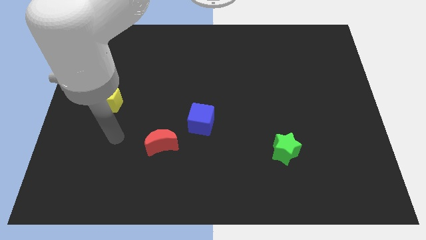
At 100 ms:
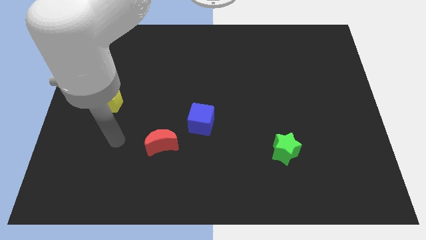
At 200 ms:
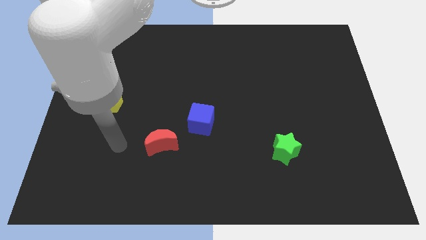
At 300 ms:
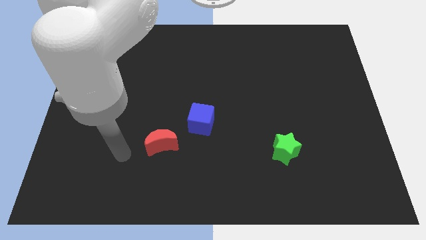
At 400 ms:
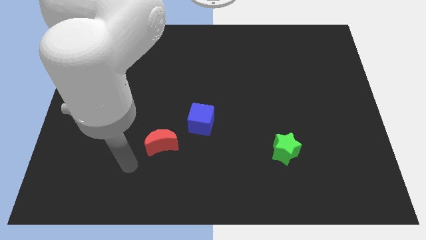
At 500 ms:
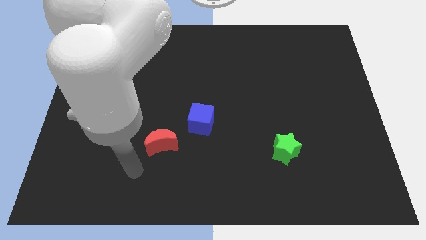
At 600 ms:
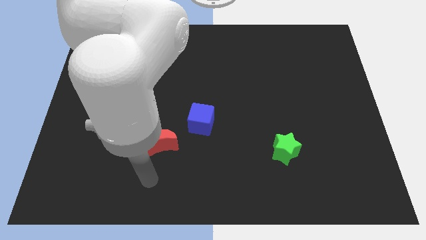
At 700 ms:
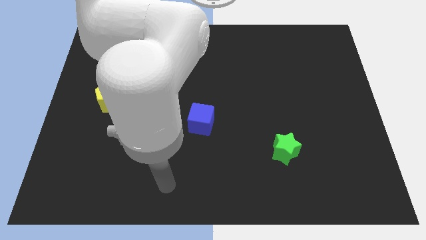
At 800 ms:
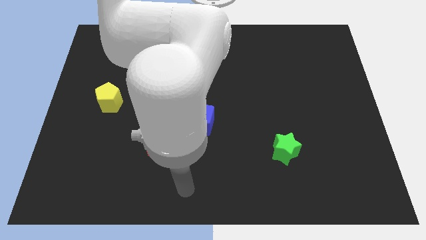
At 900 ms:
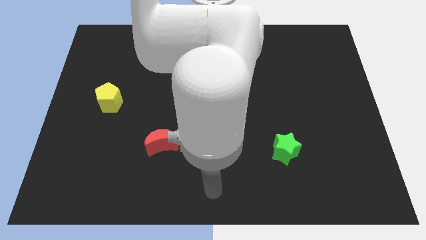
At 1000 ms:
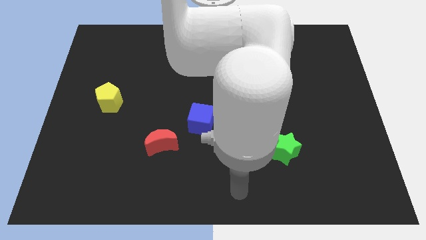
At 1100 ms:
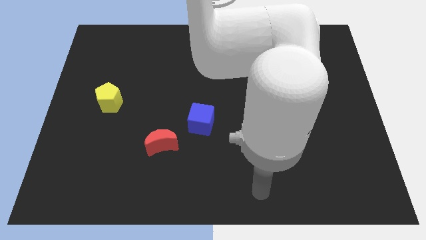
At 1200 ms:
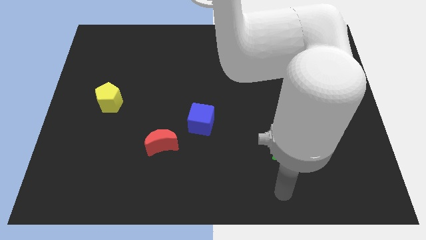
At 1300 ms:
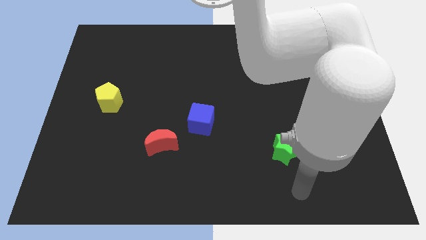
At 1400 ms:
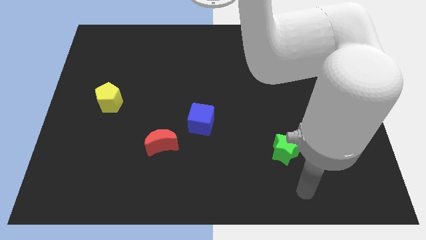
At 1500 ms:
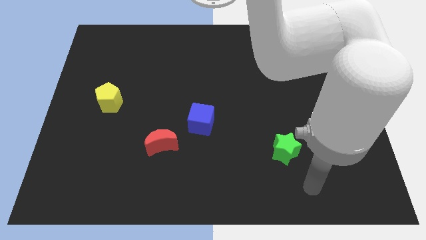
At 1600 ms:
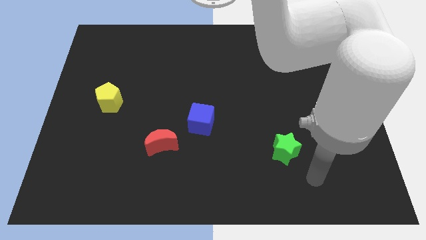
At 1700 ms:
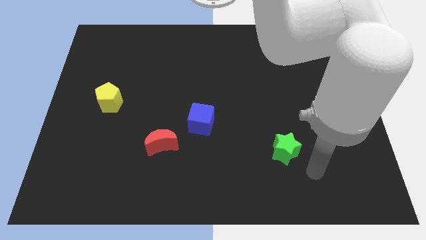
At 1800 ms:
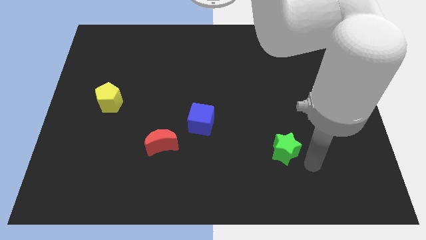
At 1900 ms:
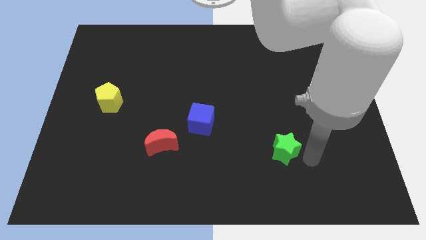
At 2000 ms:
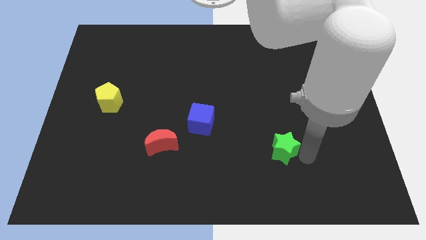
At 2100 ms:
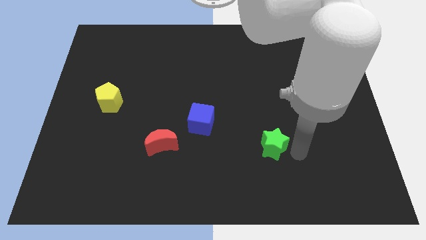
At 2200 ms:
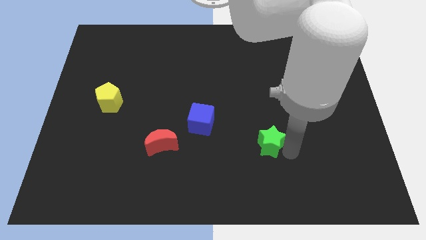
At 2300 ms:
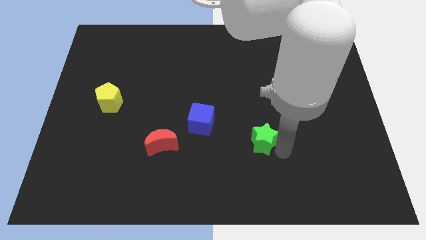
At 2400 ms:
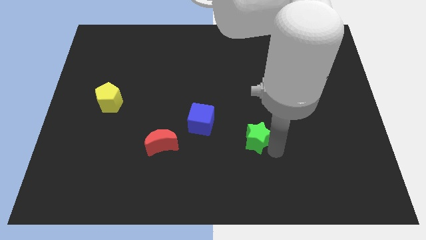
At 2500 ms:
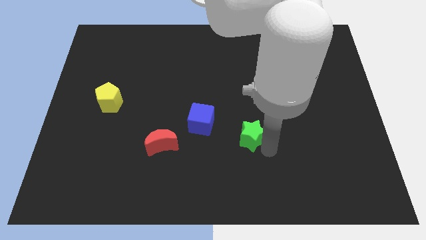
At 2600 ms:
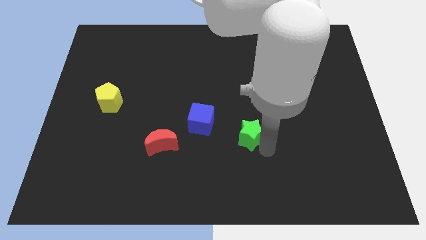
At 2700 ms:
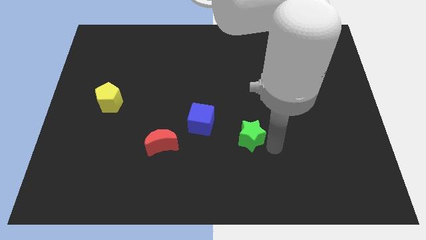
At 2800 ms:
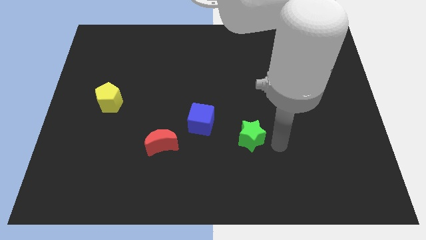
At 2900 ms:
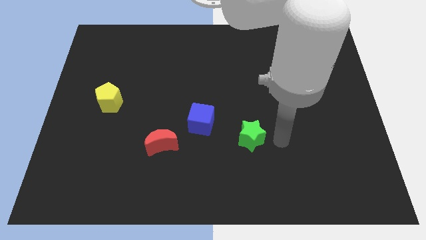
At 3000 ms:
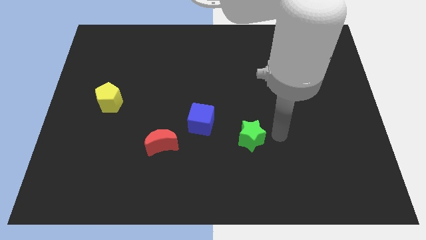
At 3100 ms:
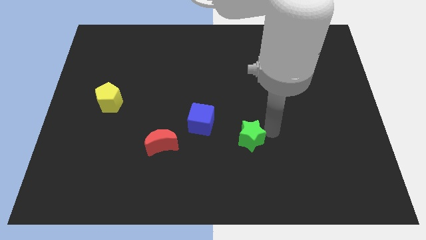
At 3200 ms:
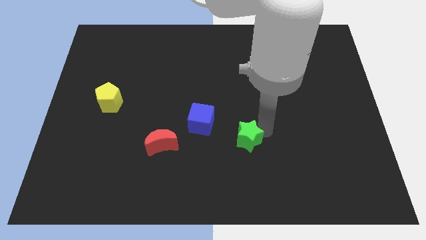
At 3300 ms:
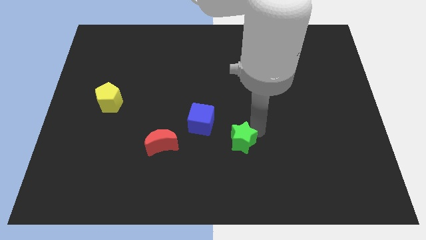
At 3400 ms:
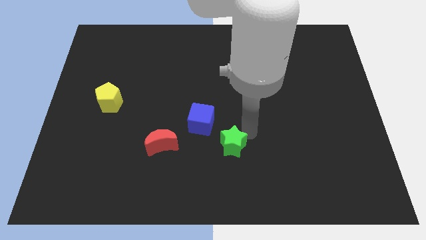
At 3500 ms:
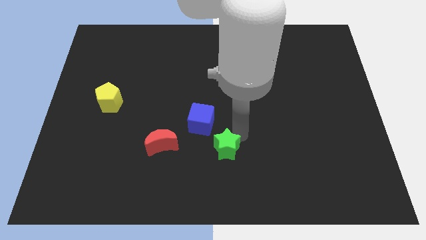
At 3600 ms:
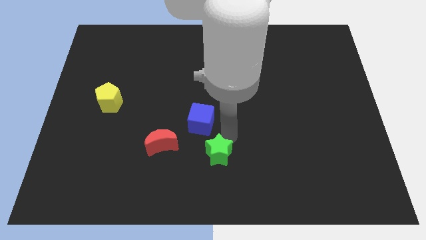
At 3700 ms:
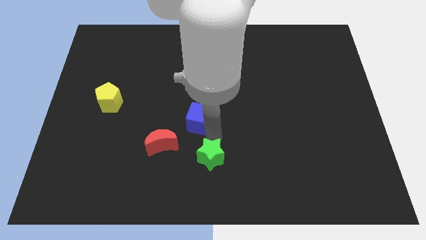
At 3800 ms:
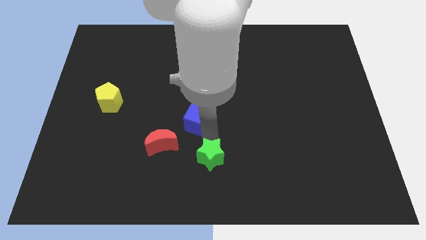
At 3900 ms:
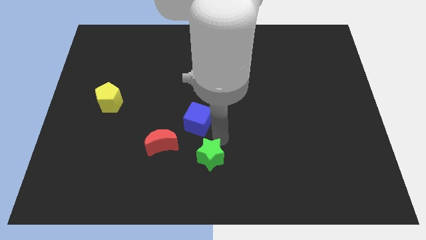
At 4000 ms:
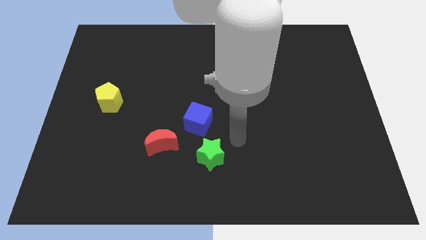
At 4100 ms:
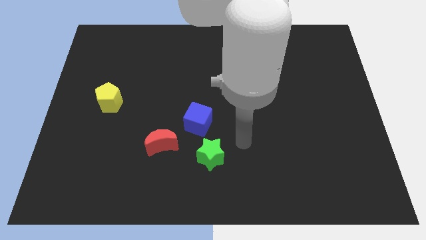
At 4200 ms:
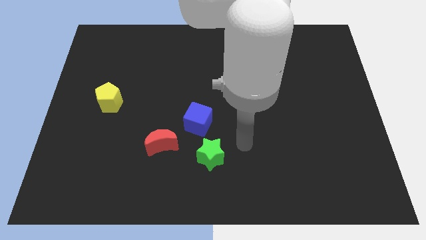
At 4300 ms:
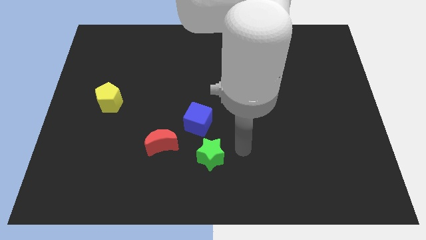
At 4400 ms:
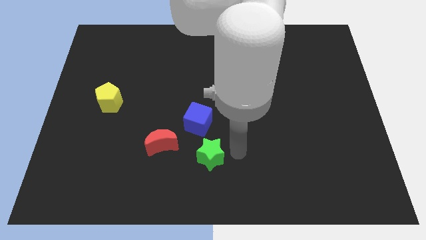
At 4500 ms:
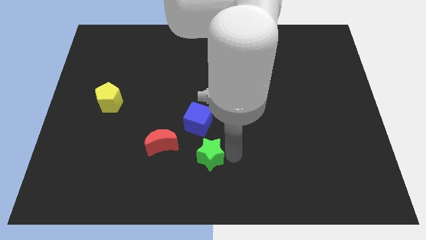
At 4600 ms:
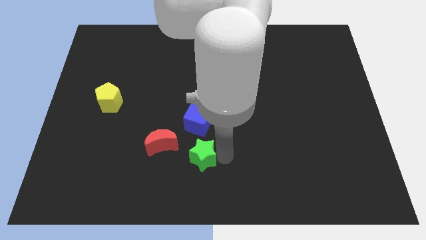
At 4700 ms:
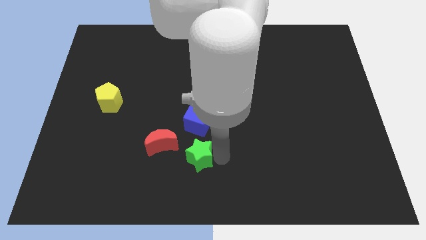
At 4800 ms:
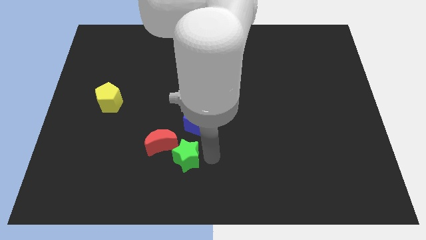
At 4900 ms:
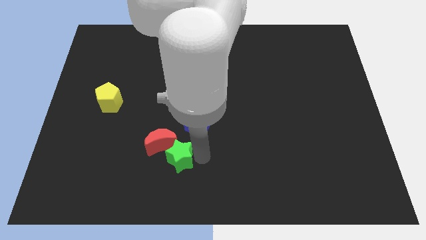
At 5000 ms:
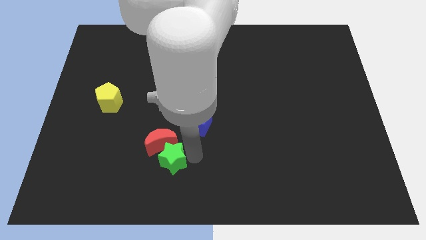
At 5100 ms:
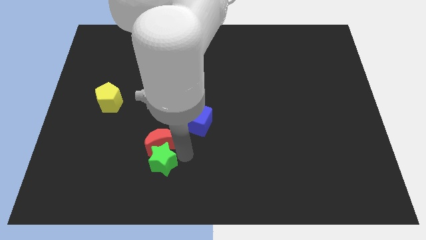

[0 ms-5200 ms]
slide the star to the moon

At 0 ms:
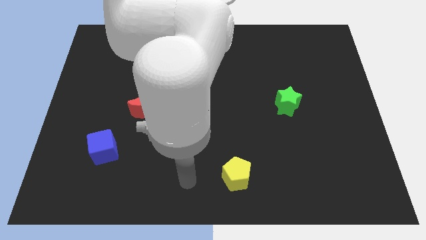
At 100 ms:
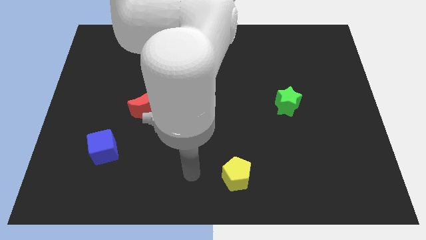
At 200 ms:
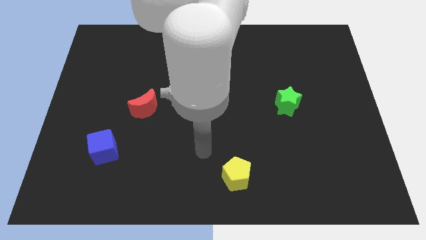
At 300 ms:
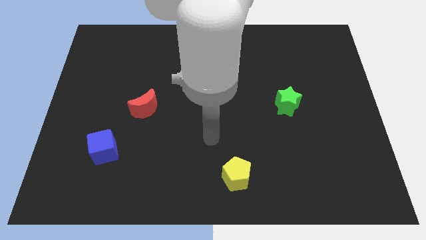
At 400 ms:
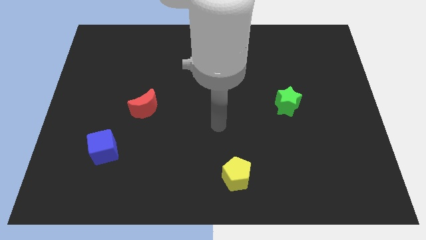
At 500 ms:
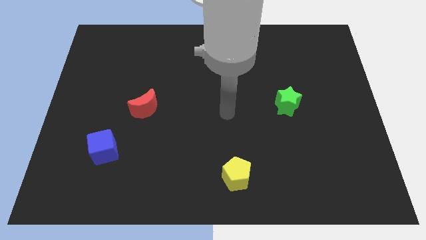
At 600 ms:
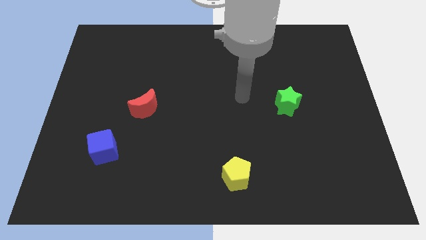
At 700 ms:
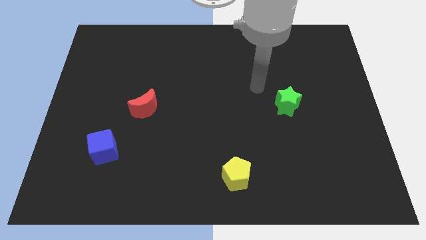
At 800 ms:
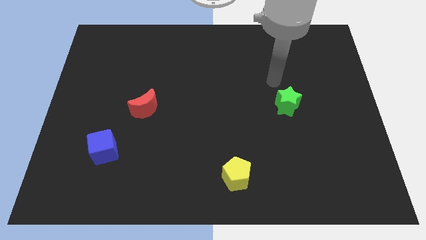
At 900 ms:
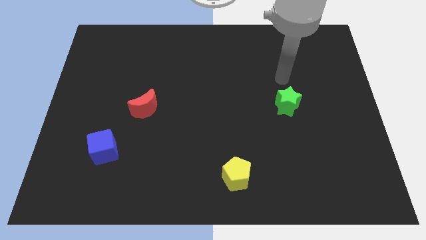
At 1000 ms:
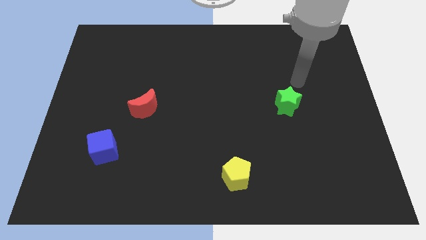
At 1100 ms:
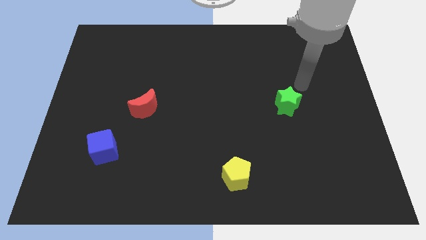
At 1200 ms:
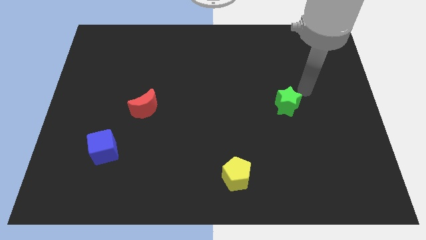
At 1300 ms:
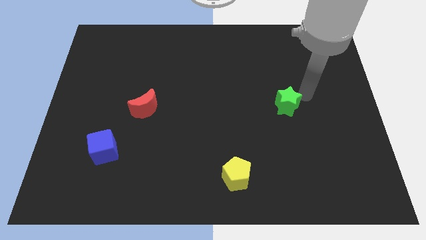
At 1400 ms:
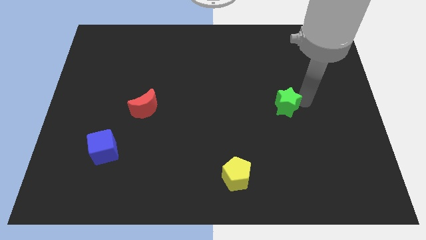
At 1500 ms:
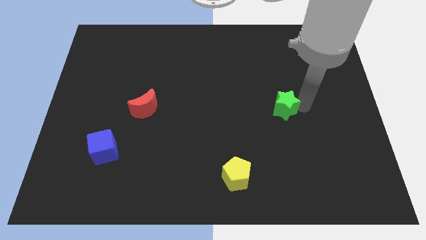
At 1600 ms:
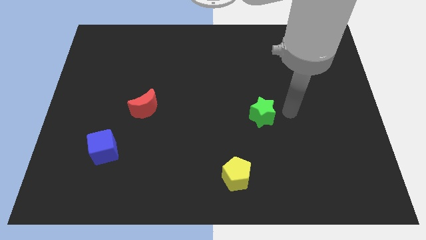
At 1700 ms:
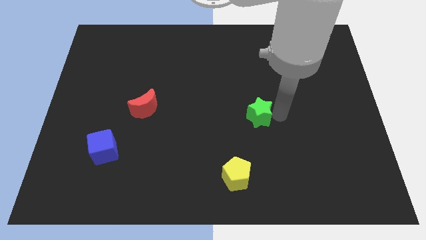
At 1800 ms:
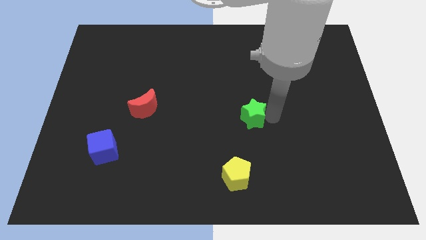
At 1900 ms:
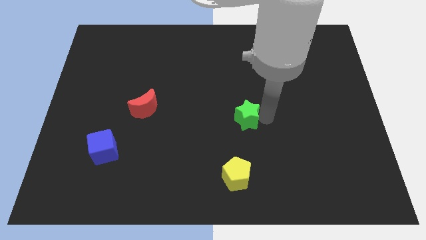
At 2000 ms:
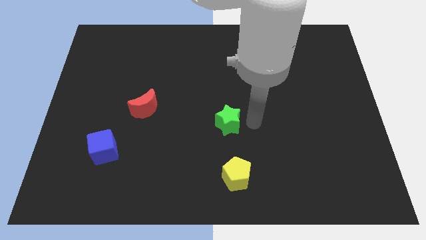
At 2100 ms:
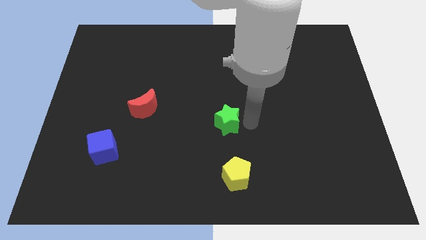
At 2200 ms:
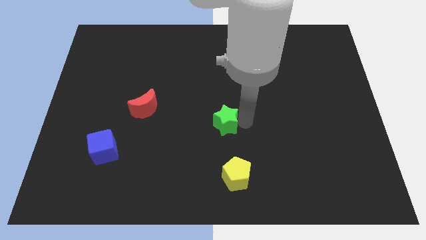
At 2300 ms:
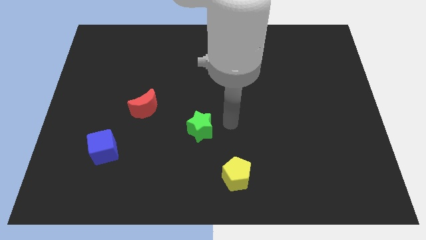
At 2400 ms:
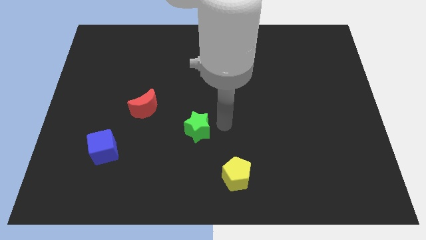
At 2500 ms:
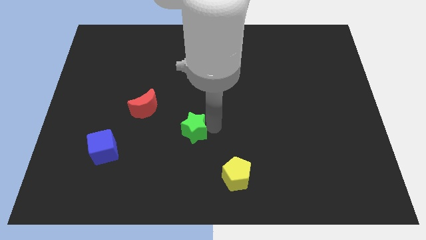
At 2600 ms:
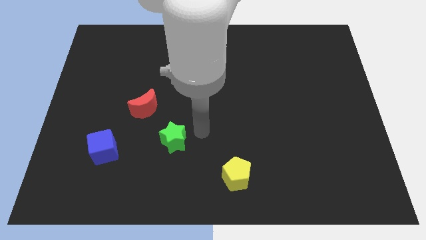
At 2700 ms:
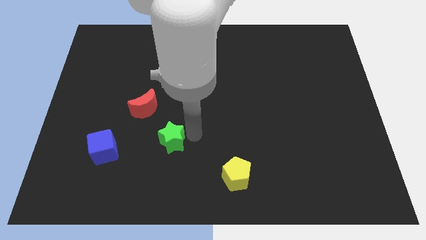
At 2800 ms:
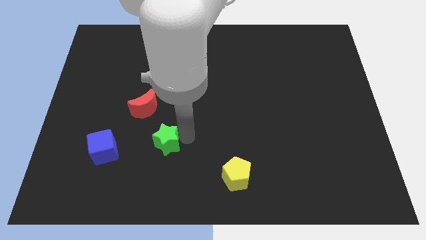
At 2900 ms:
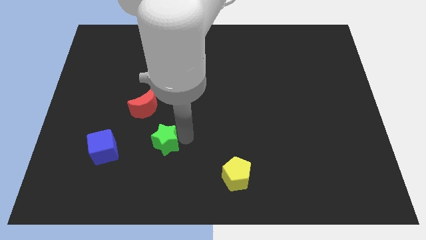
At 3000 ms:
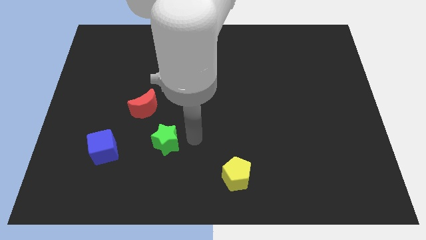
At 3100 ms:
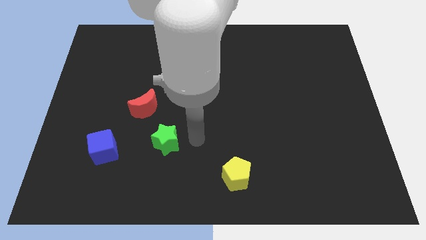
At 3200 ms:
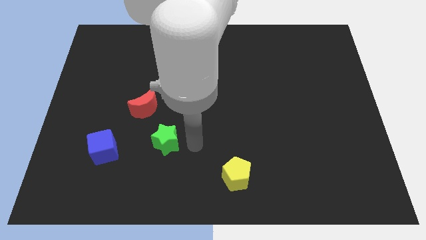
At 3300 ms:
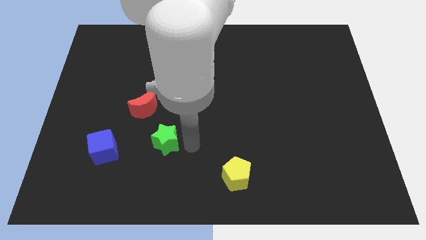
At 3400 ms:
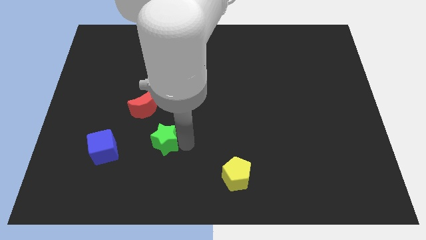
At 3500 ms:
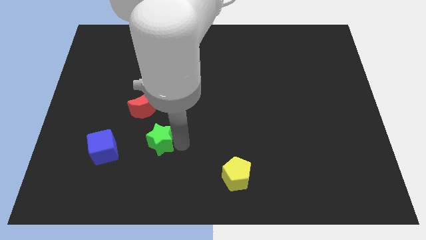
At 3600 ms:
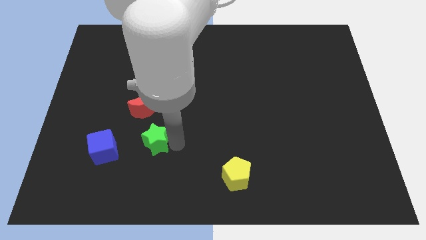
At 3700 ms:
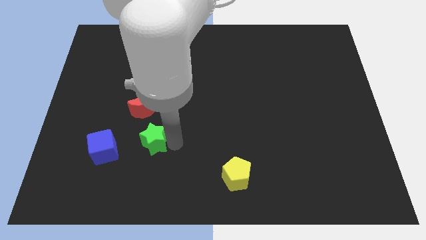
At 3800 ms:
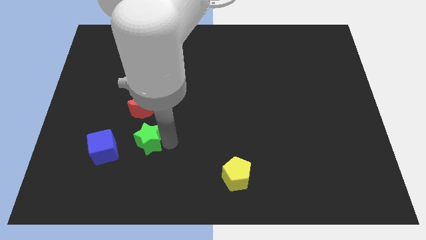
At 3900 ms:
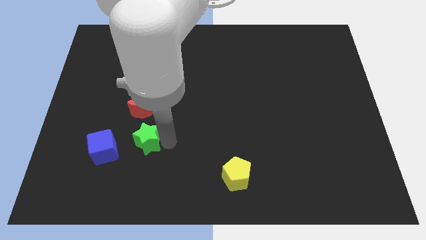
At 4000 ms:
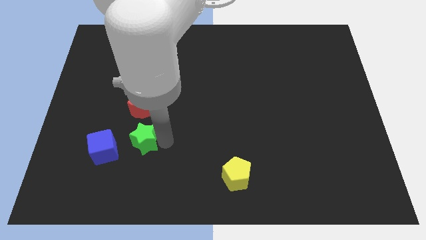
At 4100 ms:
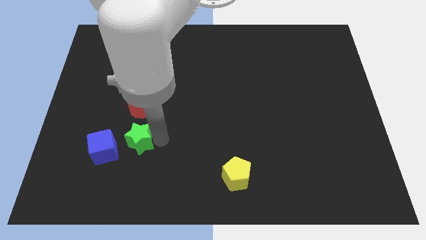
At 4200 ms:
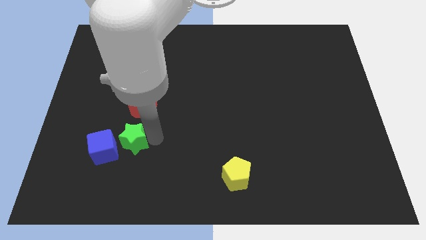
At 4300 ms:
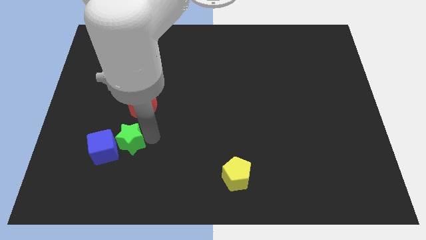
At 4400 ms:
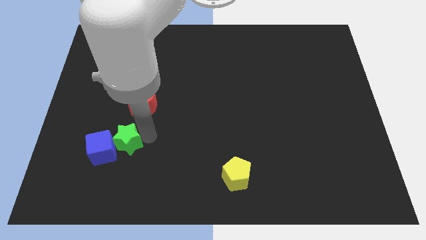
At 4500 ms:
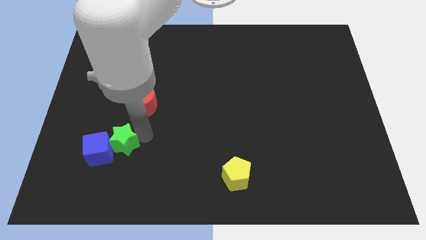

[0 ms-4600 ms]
slide the green block towards the cube
